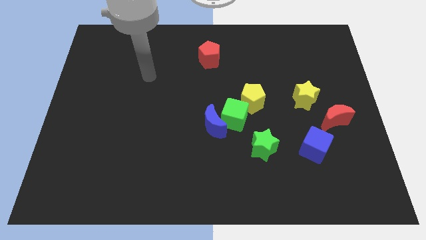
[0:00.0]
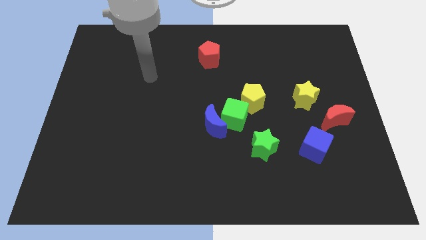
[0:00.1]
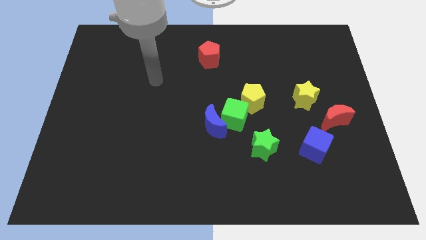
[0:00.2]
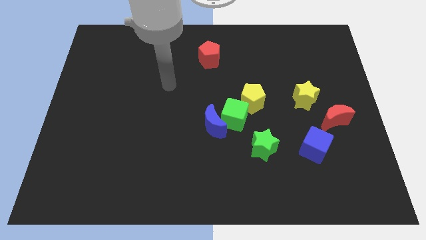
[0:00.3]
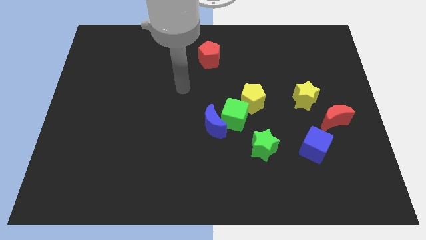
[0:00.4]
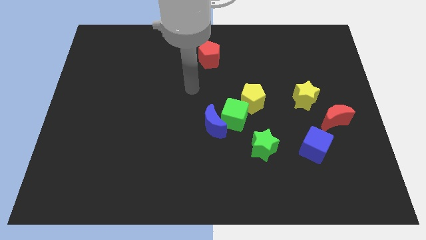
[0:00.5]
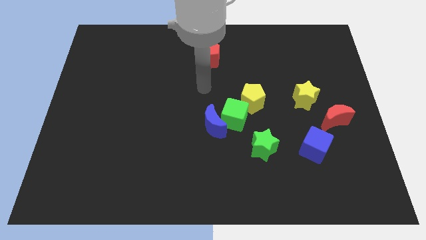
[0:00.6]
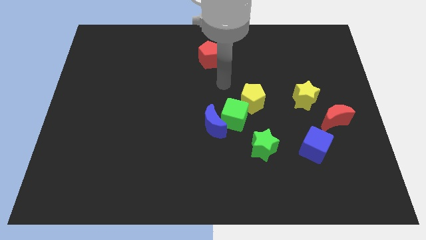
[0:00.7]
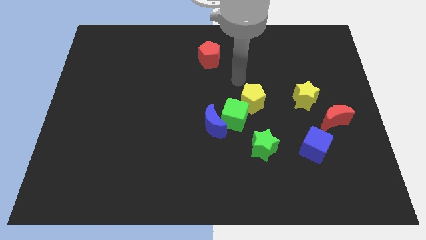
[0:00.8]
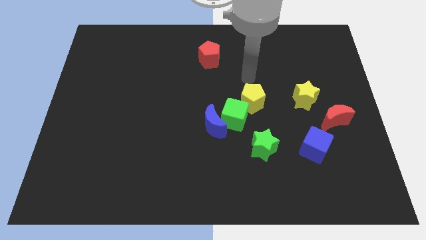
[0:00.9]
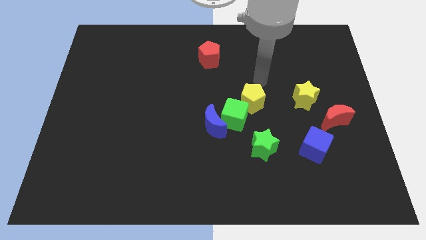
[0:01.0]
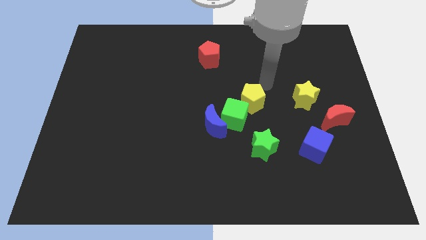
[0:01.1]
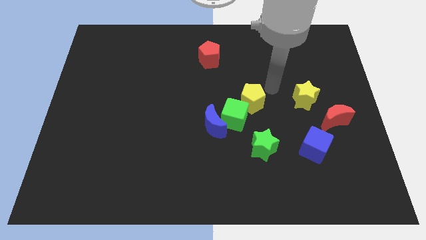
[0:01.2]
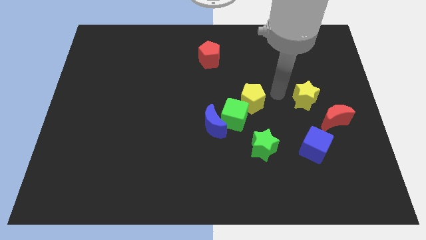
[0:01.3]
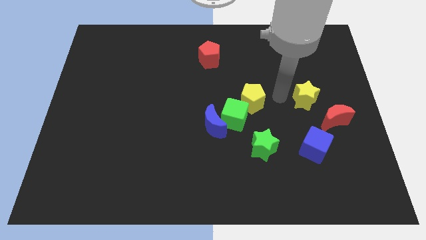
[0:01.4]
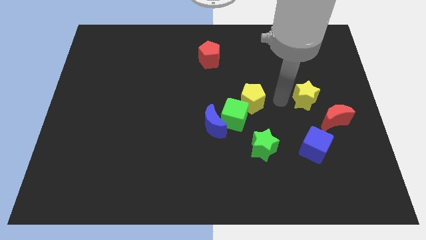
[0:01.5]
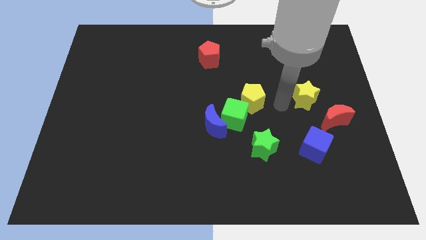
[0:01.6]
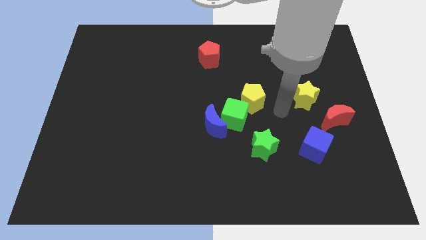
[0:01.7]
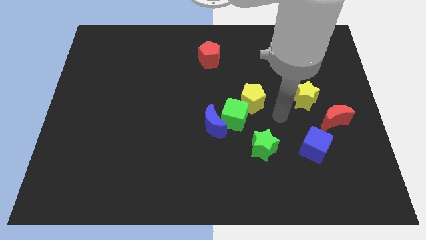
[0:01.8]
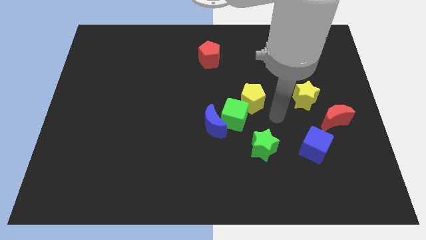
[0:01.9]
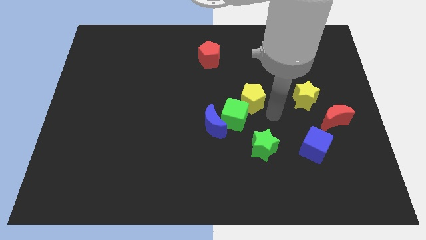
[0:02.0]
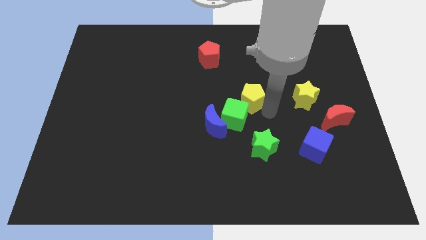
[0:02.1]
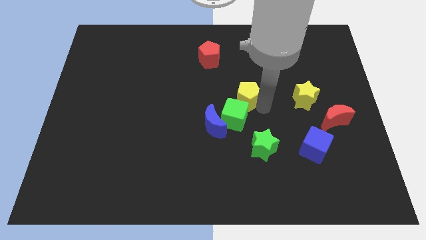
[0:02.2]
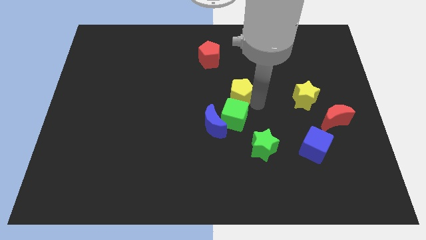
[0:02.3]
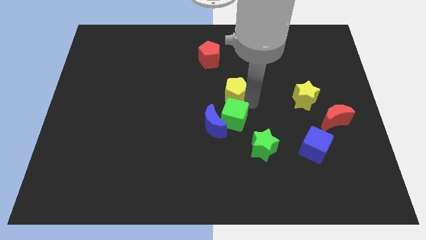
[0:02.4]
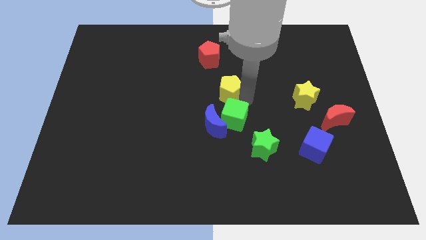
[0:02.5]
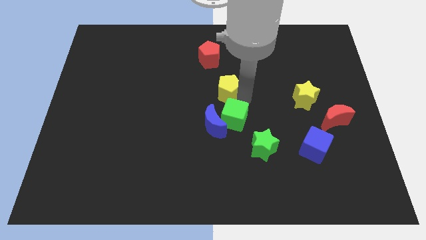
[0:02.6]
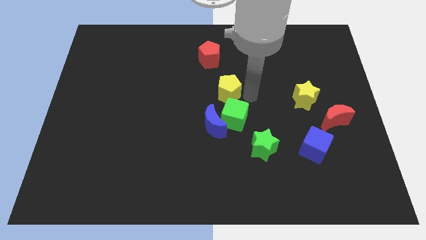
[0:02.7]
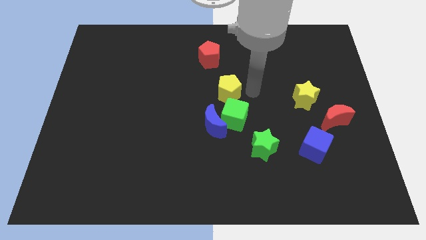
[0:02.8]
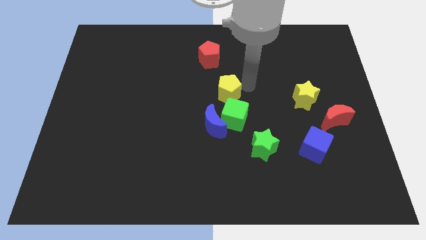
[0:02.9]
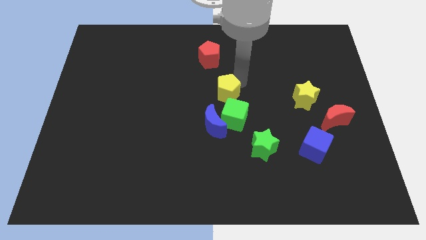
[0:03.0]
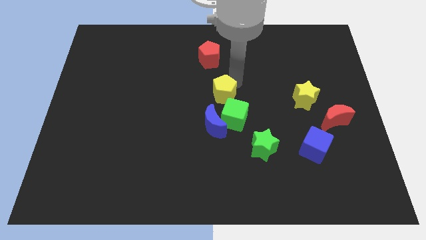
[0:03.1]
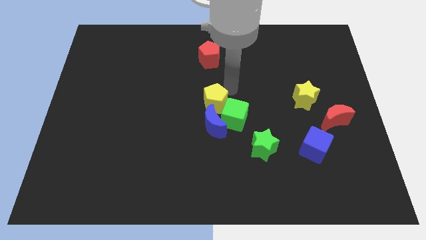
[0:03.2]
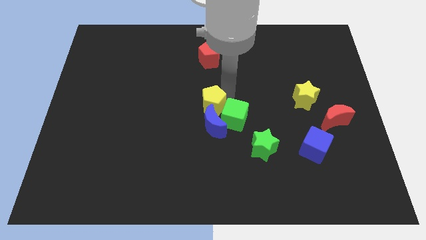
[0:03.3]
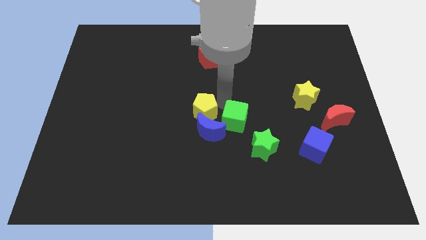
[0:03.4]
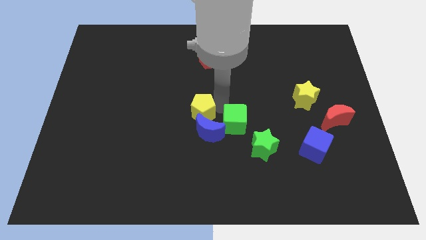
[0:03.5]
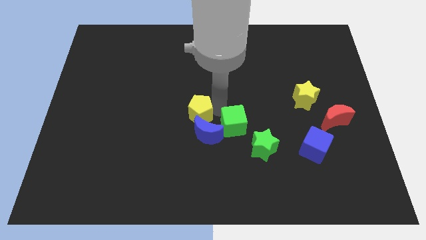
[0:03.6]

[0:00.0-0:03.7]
push the yellow pentagon close to the blue moon

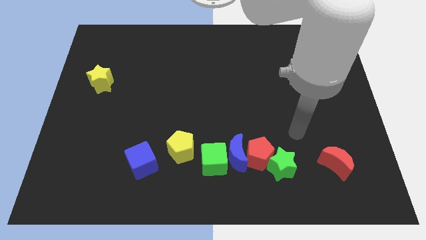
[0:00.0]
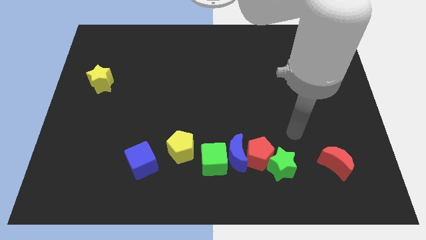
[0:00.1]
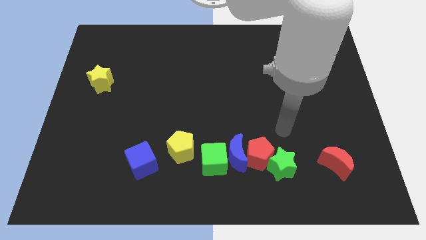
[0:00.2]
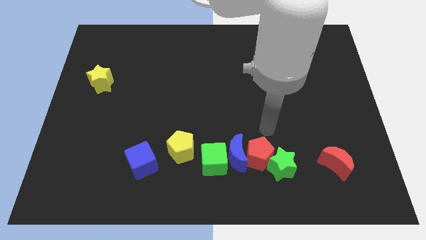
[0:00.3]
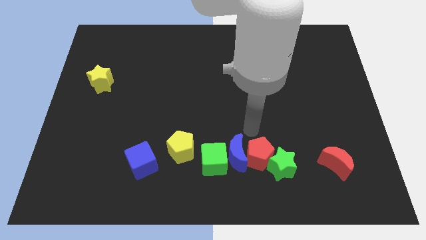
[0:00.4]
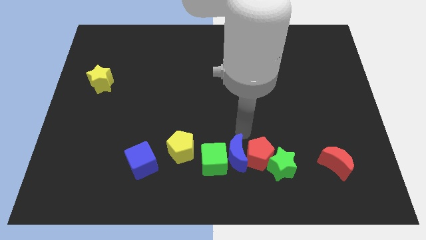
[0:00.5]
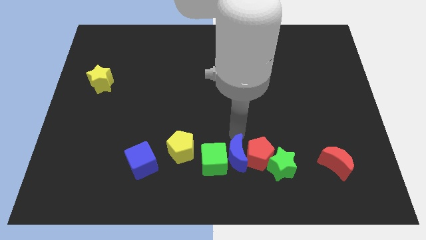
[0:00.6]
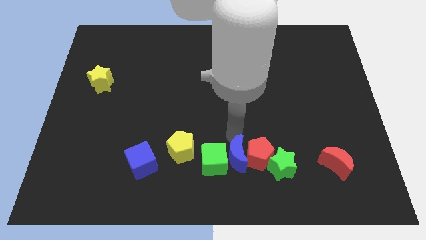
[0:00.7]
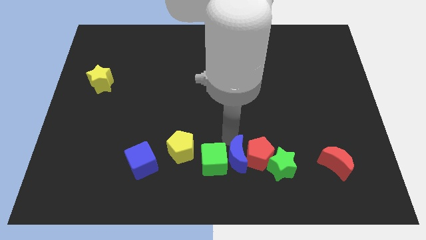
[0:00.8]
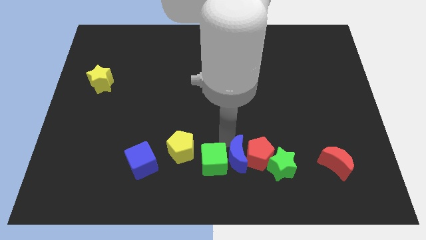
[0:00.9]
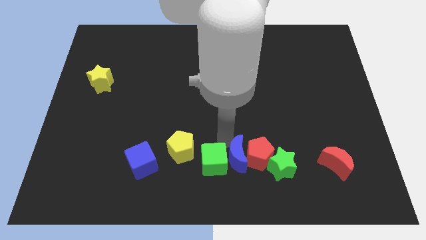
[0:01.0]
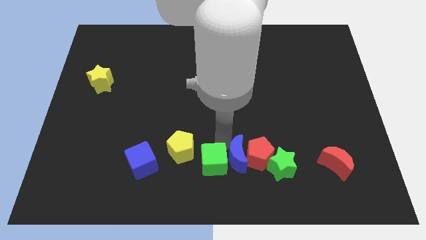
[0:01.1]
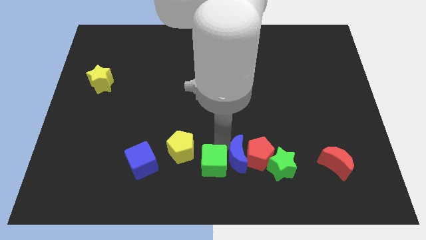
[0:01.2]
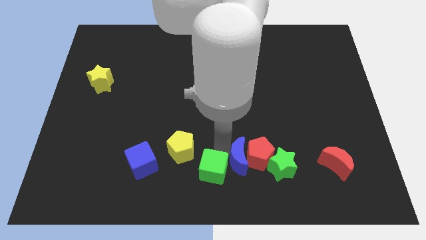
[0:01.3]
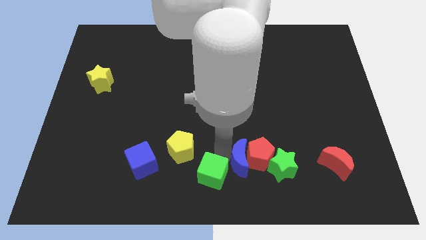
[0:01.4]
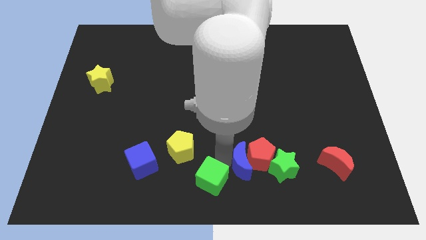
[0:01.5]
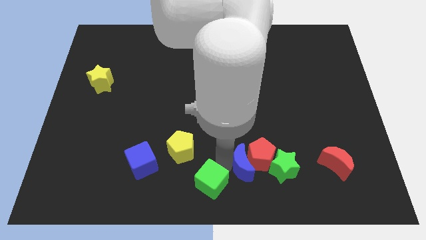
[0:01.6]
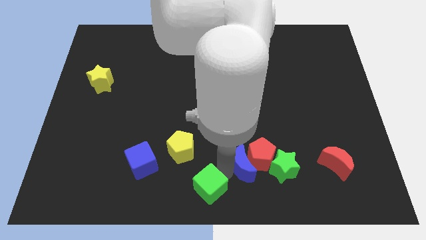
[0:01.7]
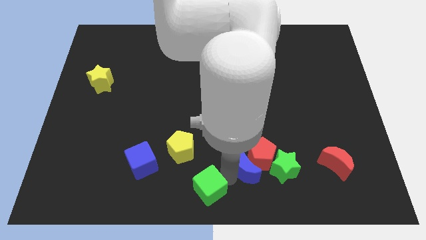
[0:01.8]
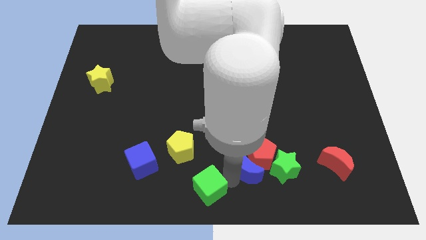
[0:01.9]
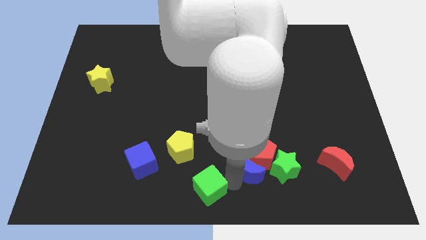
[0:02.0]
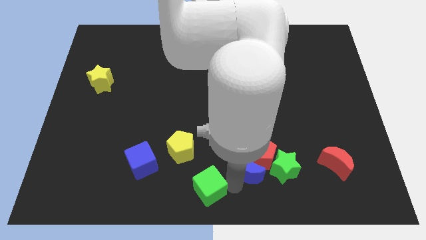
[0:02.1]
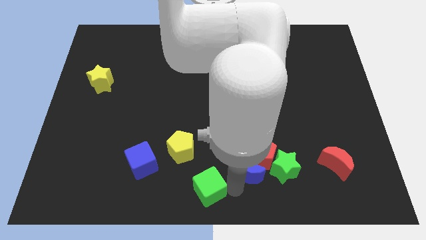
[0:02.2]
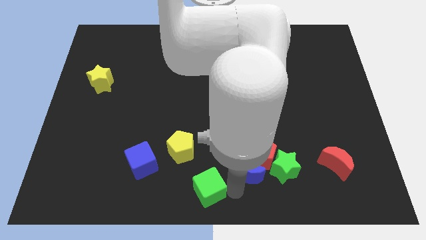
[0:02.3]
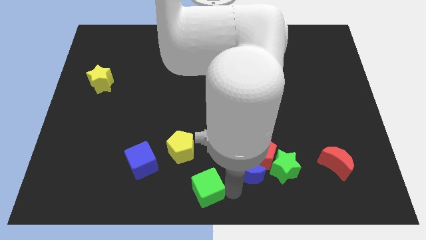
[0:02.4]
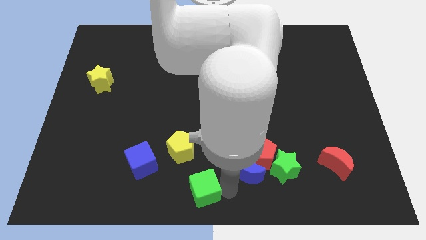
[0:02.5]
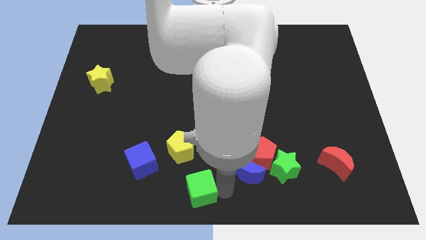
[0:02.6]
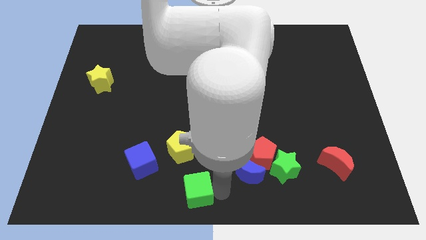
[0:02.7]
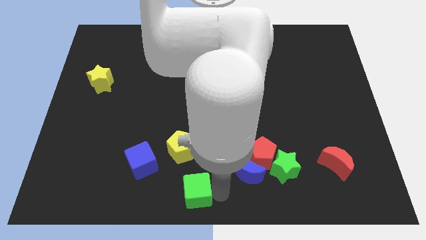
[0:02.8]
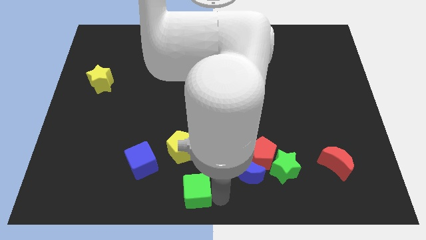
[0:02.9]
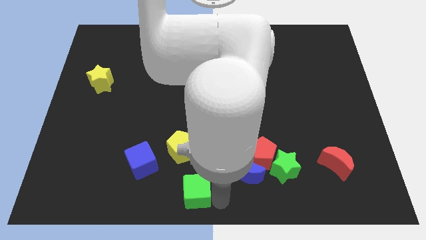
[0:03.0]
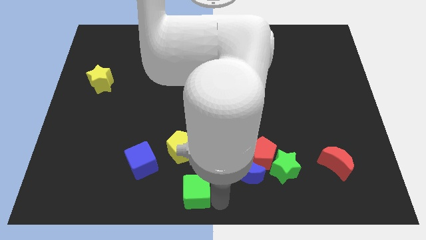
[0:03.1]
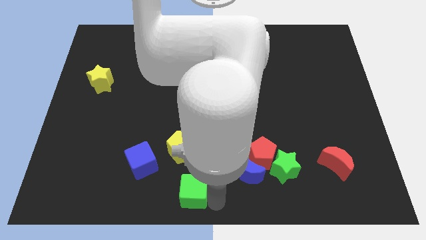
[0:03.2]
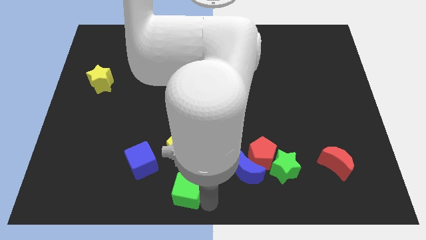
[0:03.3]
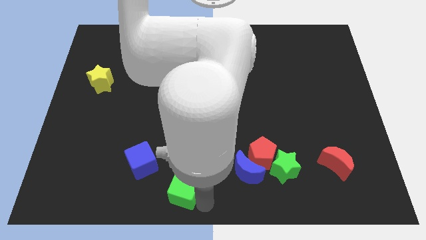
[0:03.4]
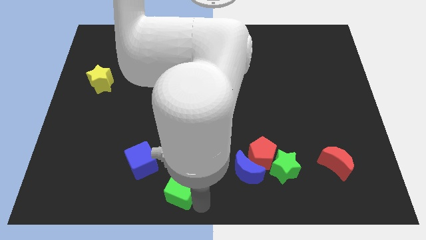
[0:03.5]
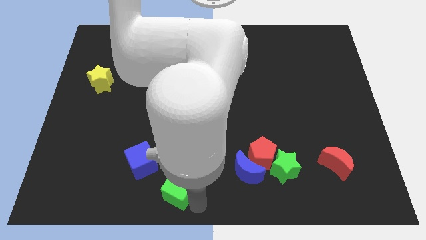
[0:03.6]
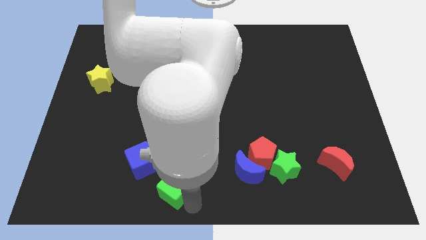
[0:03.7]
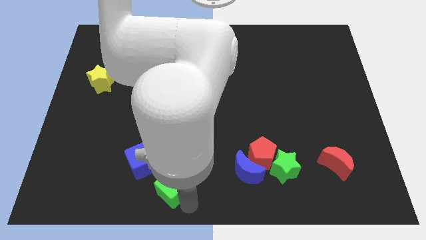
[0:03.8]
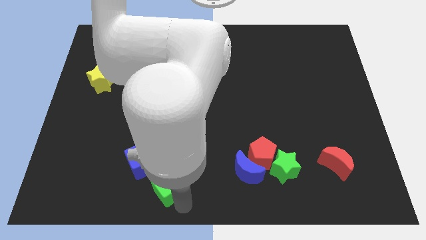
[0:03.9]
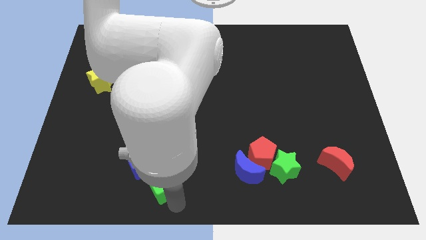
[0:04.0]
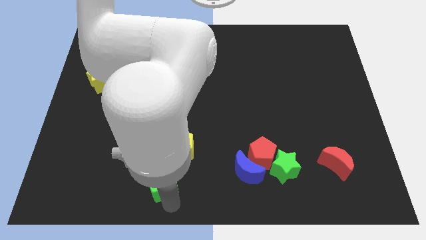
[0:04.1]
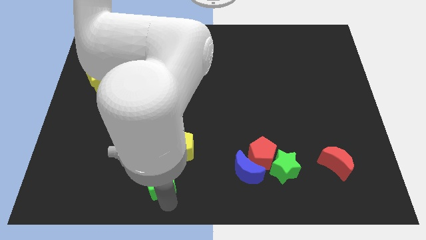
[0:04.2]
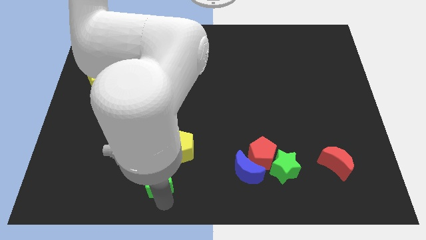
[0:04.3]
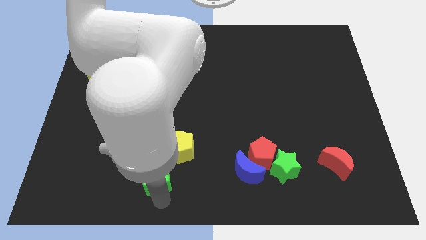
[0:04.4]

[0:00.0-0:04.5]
move the green cube to the blue cube

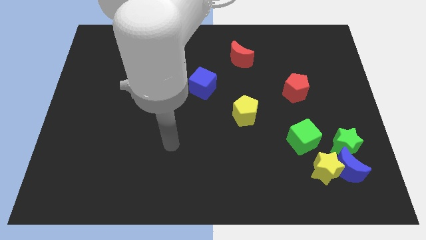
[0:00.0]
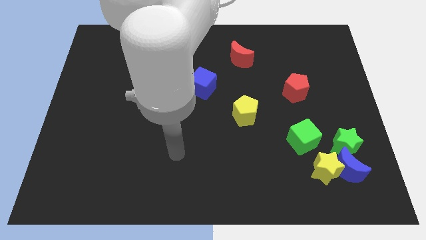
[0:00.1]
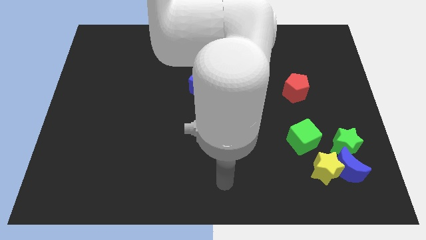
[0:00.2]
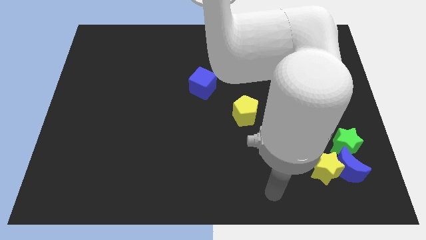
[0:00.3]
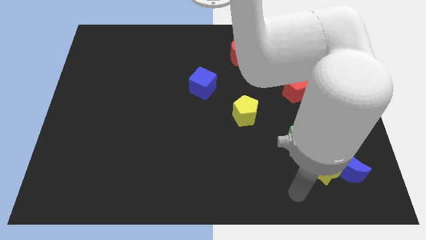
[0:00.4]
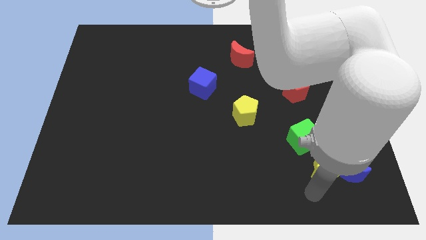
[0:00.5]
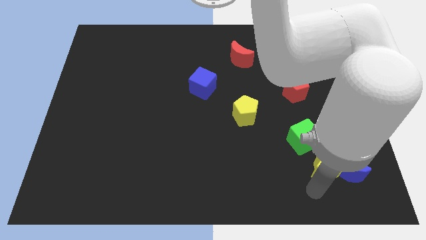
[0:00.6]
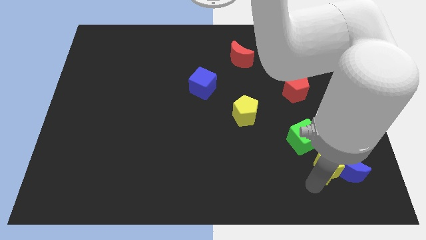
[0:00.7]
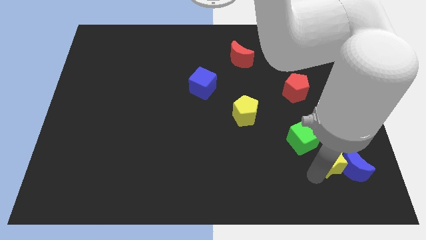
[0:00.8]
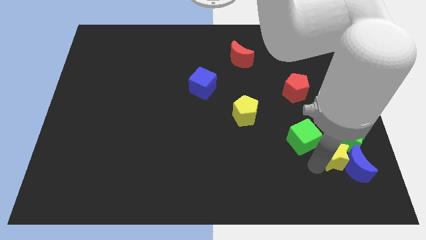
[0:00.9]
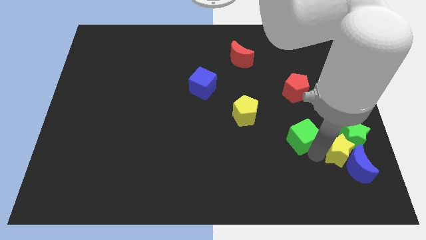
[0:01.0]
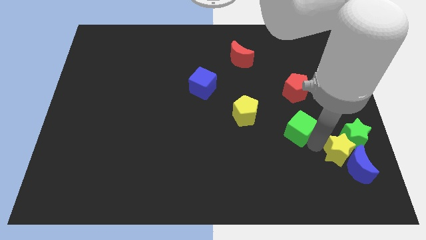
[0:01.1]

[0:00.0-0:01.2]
put the yellow star towards the green star
